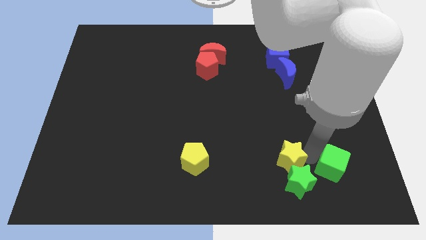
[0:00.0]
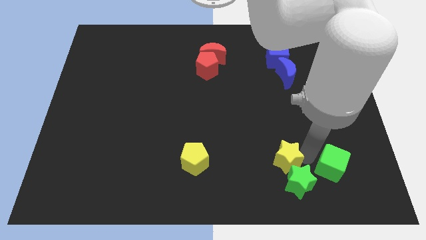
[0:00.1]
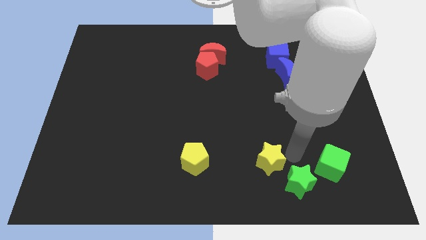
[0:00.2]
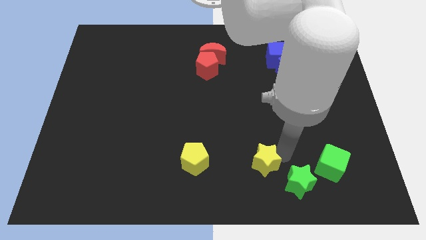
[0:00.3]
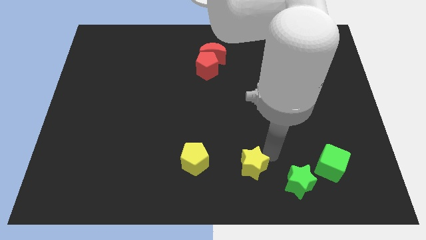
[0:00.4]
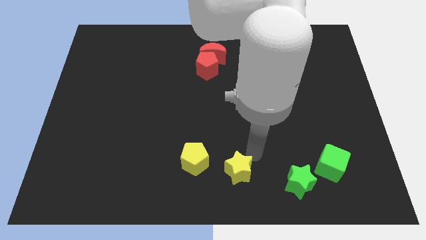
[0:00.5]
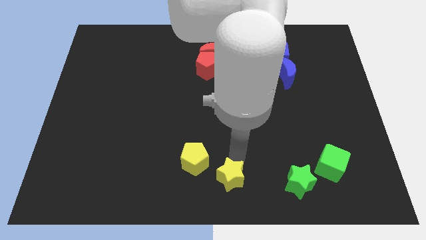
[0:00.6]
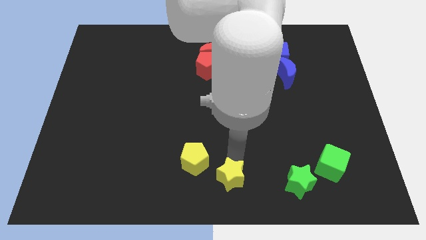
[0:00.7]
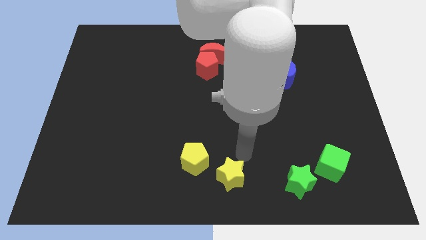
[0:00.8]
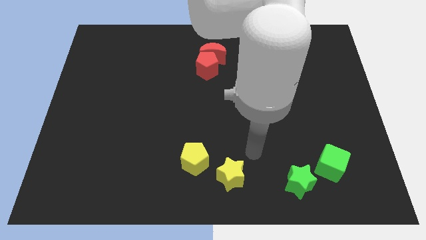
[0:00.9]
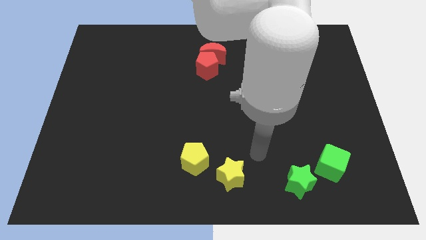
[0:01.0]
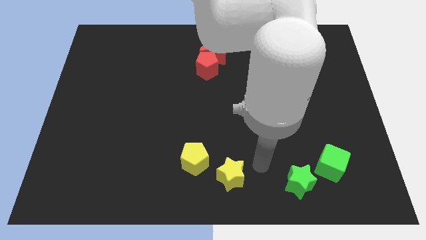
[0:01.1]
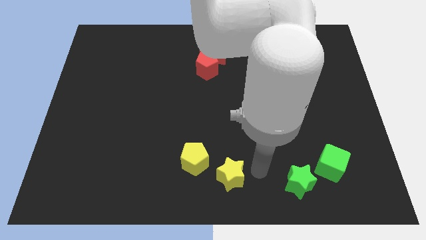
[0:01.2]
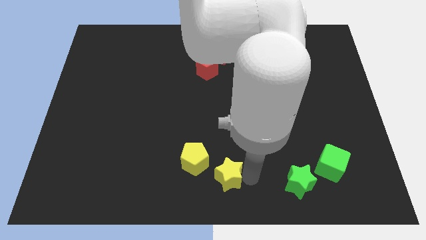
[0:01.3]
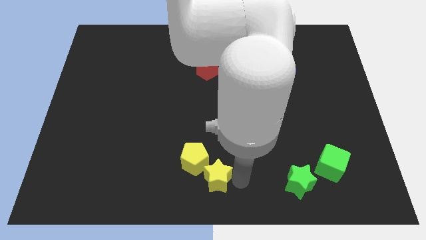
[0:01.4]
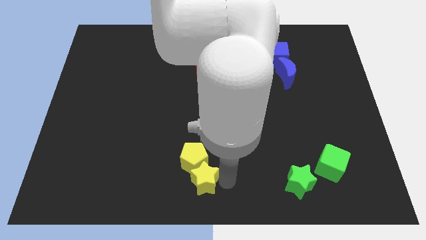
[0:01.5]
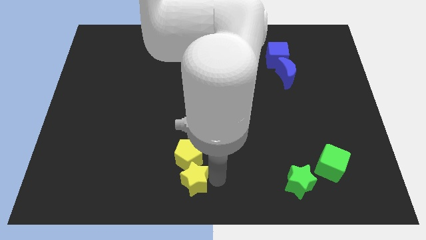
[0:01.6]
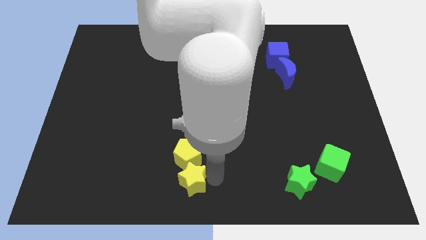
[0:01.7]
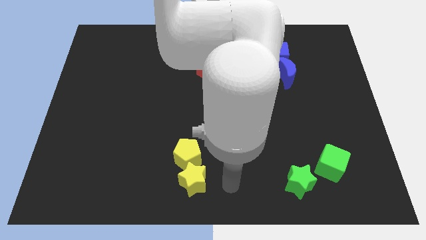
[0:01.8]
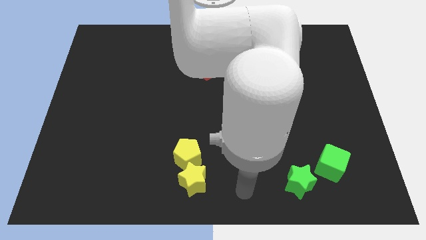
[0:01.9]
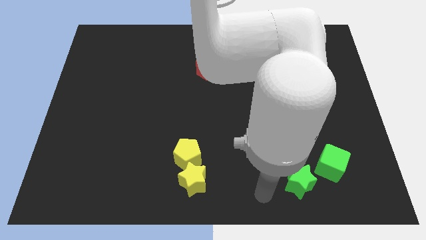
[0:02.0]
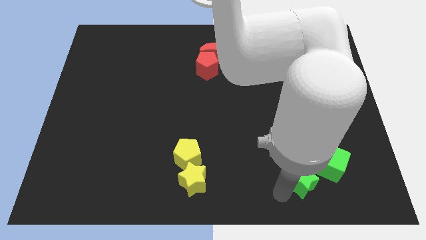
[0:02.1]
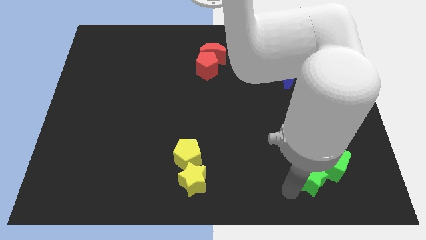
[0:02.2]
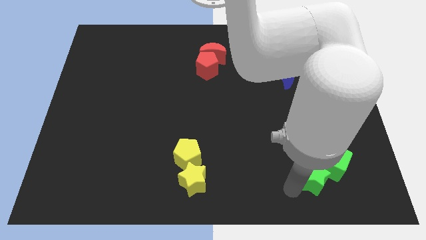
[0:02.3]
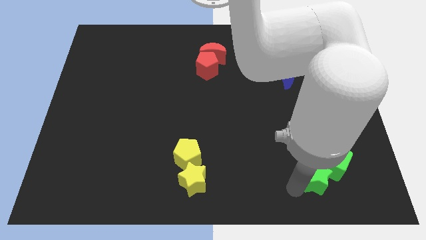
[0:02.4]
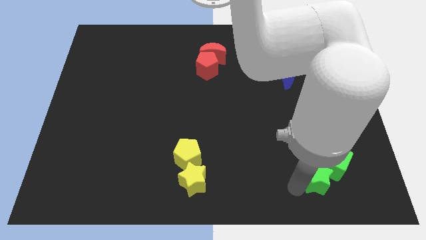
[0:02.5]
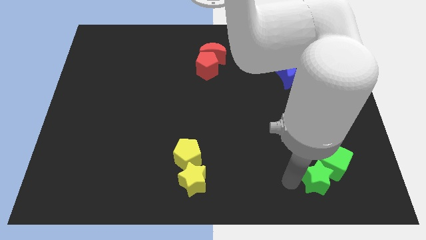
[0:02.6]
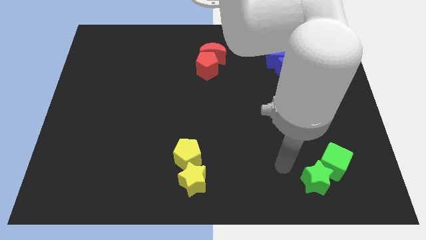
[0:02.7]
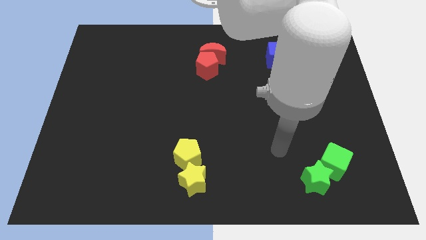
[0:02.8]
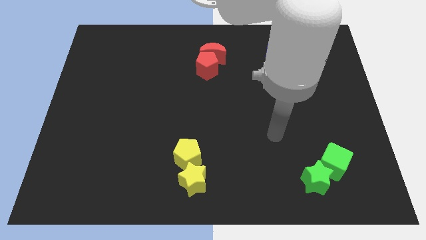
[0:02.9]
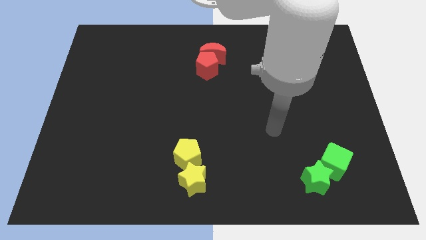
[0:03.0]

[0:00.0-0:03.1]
push the yellow and green blocks in opposite directions

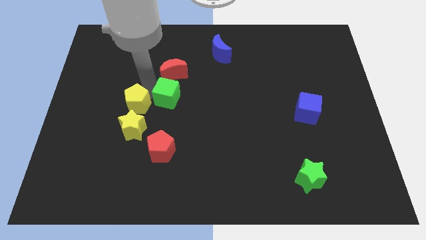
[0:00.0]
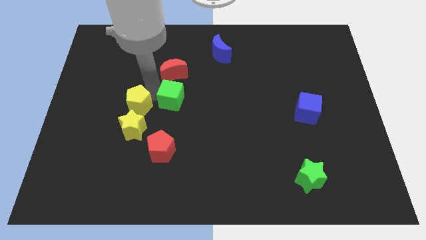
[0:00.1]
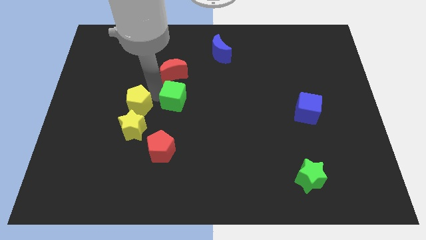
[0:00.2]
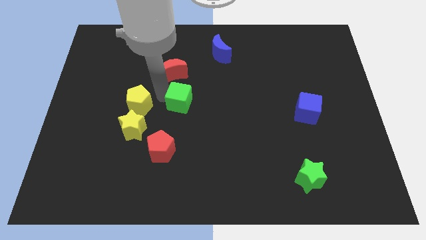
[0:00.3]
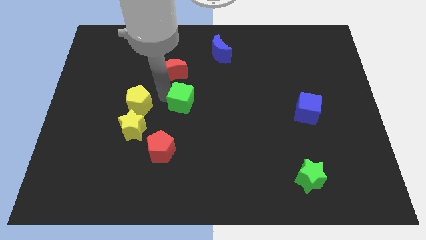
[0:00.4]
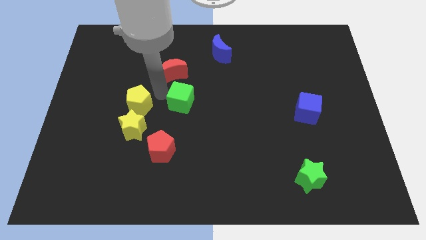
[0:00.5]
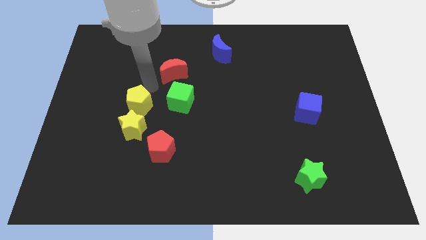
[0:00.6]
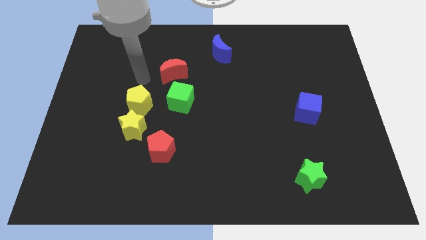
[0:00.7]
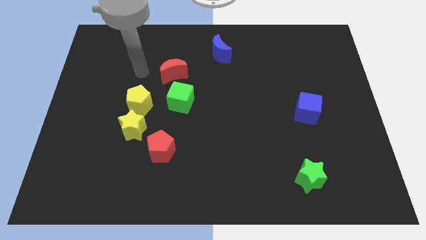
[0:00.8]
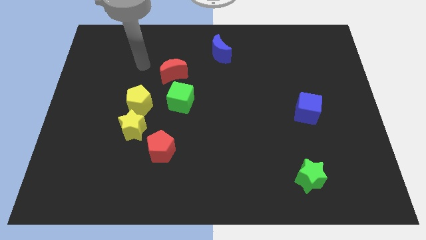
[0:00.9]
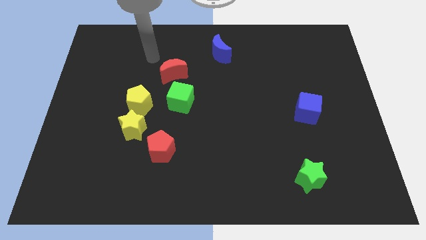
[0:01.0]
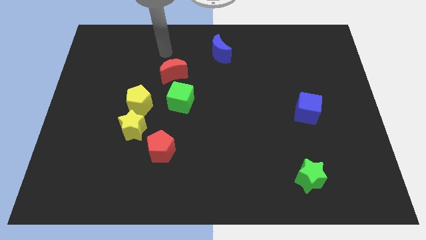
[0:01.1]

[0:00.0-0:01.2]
move green cube away from the yellow pentagon

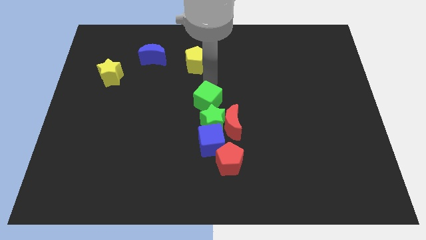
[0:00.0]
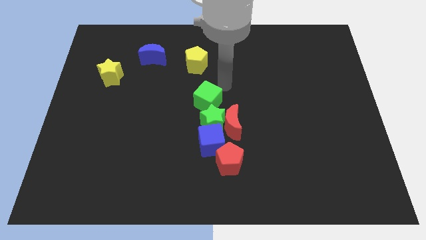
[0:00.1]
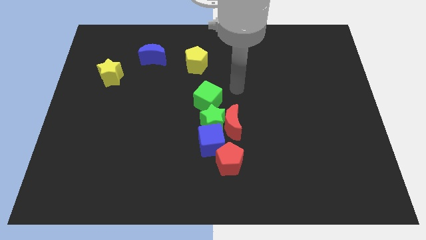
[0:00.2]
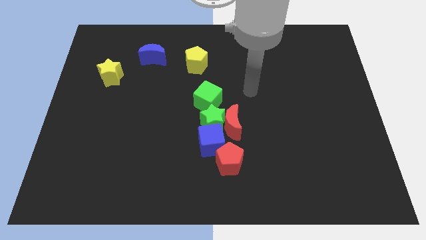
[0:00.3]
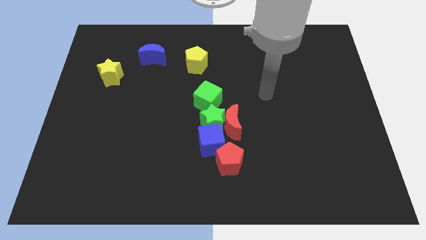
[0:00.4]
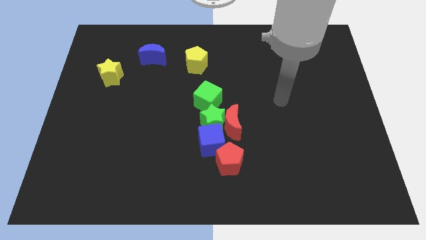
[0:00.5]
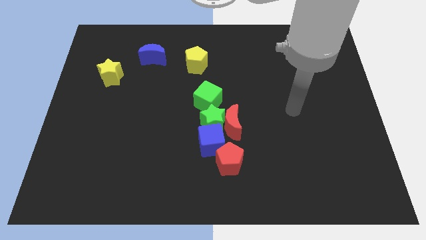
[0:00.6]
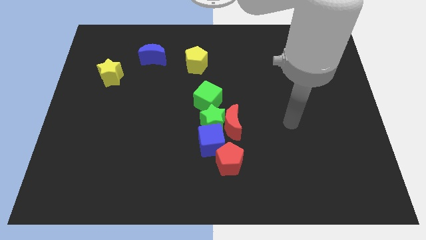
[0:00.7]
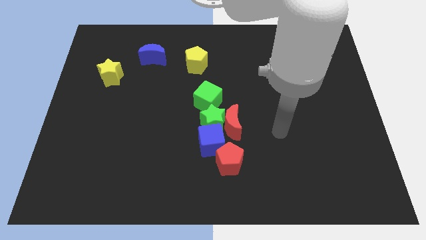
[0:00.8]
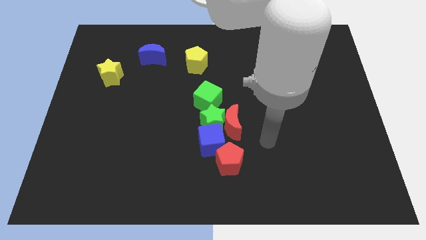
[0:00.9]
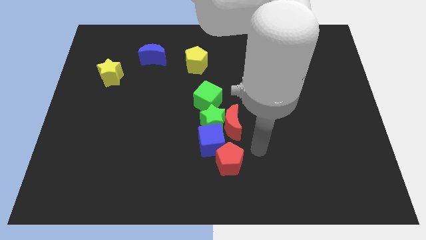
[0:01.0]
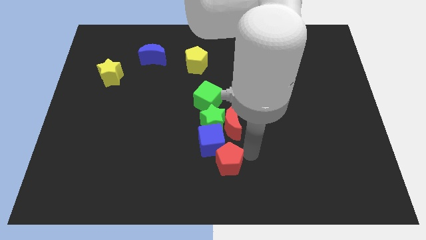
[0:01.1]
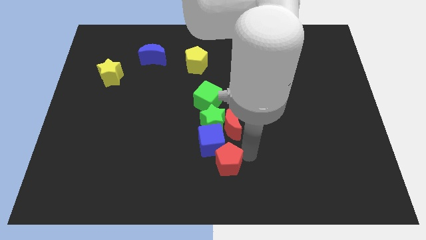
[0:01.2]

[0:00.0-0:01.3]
move arm to the red pentagon

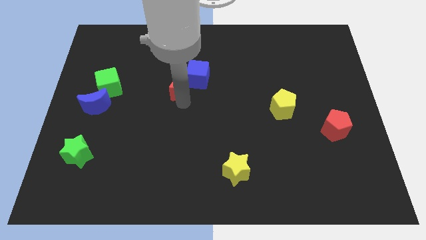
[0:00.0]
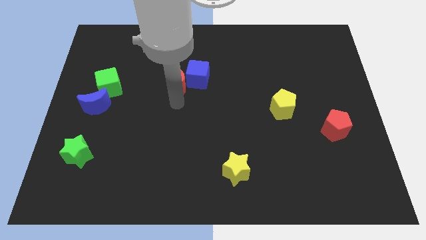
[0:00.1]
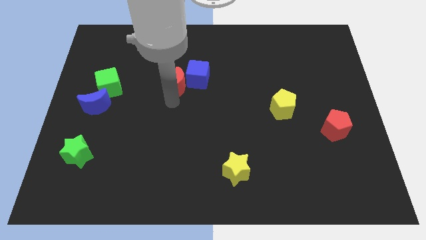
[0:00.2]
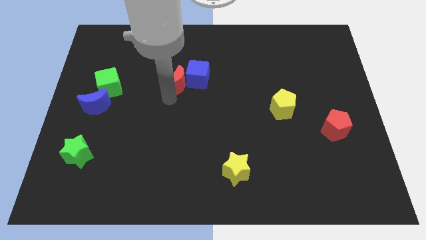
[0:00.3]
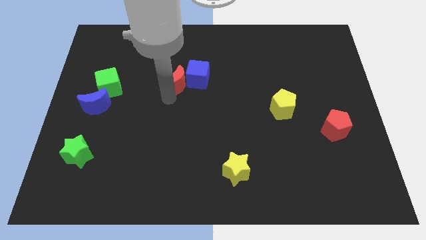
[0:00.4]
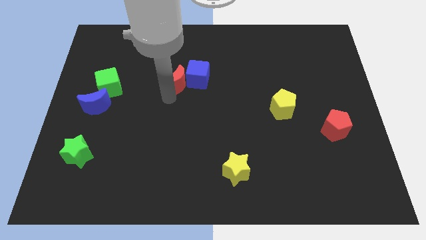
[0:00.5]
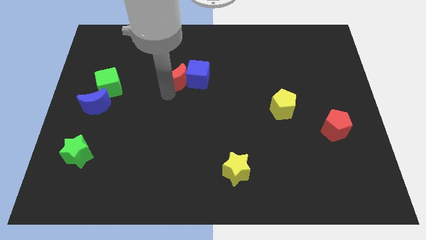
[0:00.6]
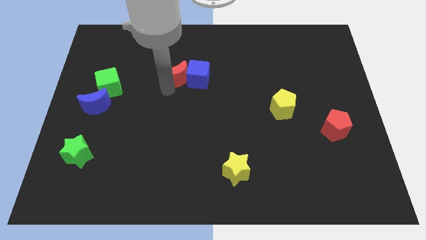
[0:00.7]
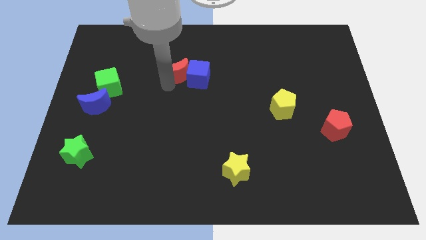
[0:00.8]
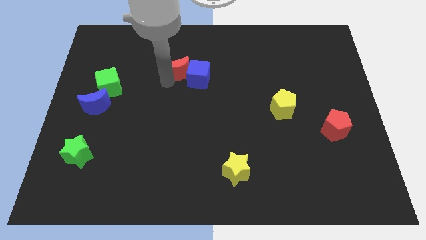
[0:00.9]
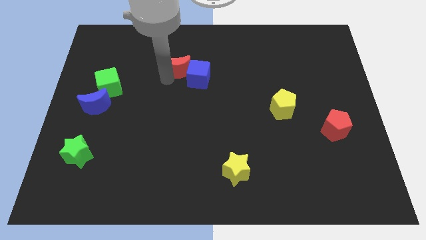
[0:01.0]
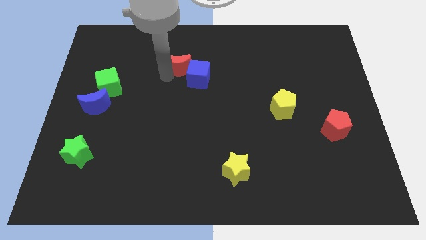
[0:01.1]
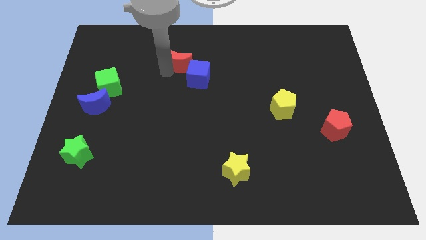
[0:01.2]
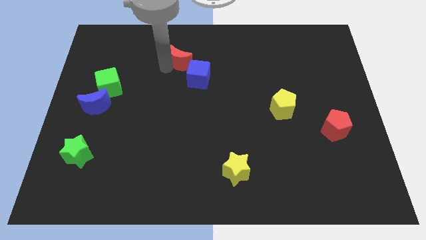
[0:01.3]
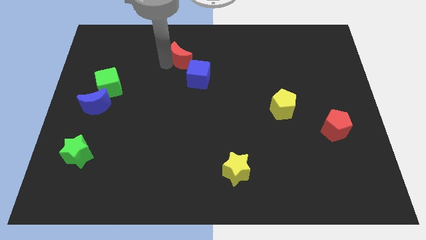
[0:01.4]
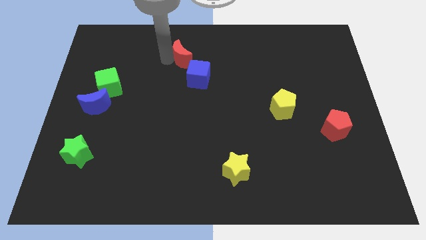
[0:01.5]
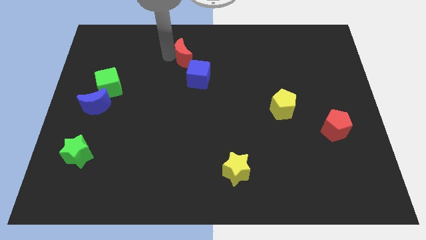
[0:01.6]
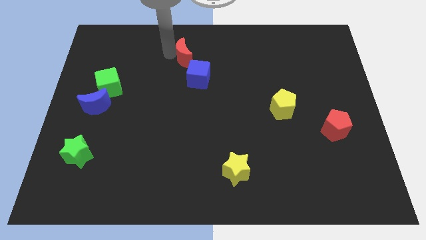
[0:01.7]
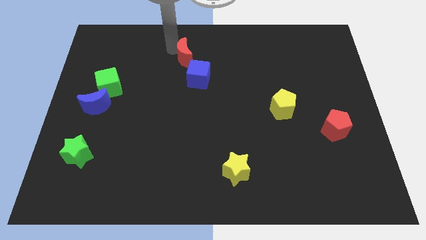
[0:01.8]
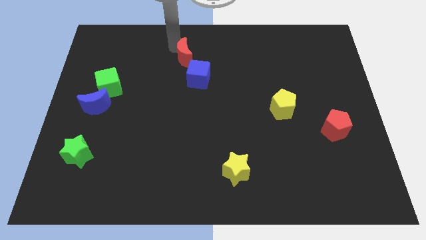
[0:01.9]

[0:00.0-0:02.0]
move the red moon to the top left side of the blue cube

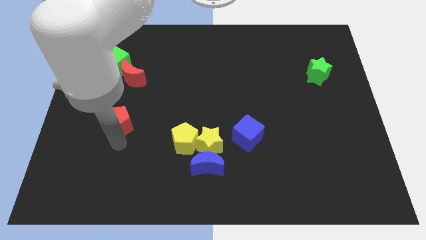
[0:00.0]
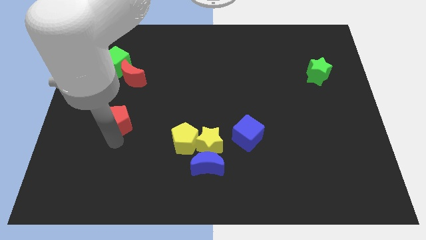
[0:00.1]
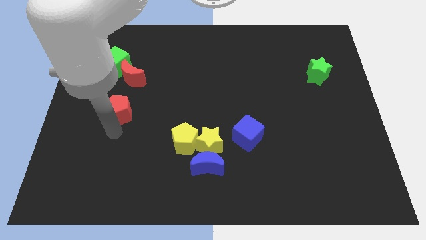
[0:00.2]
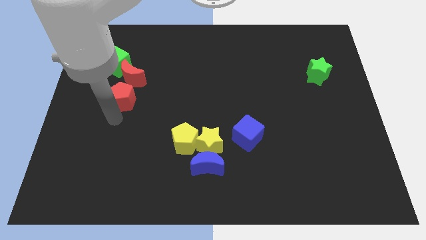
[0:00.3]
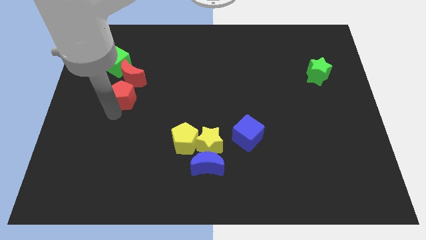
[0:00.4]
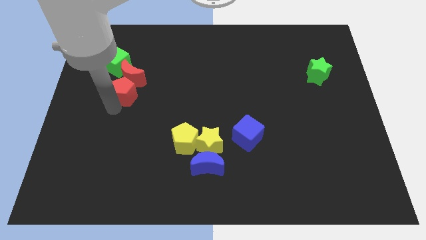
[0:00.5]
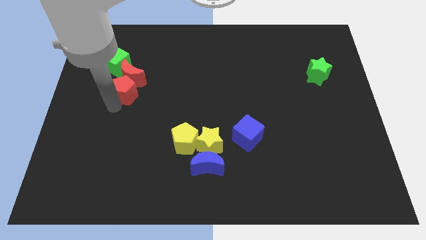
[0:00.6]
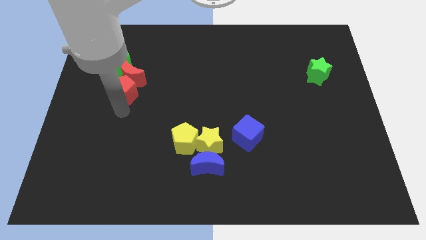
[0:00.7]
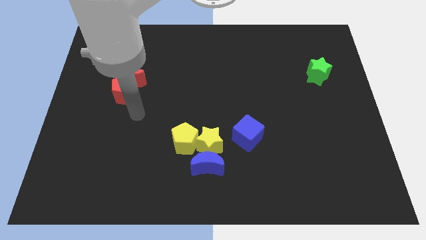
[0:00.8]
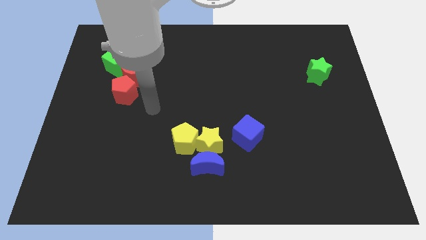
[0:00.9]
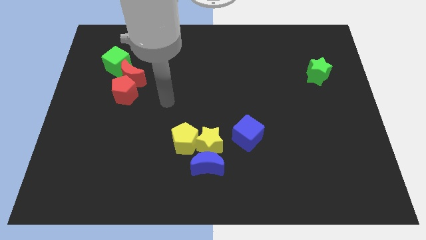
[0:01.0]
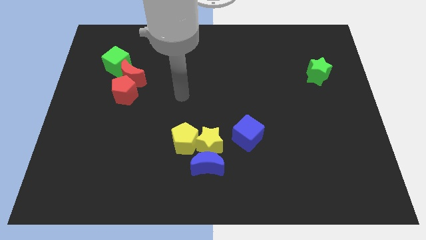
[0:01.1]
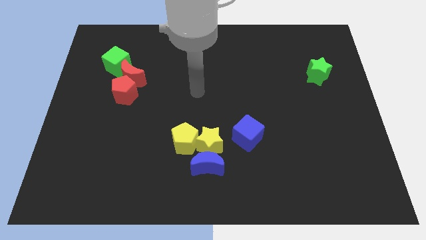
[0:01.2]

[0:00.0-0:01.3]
move the red pentagon at the bottom of the red crescent
